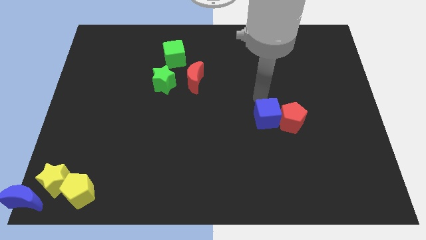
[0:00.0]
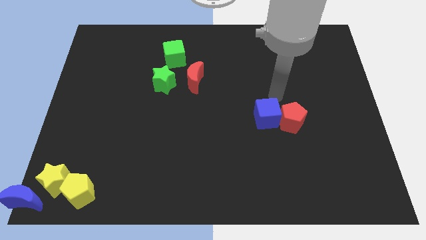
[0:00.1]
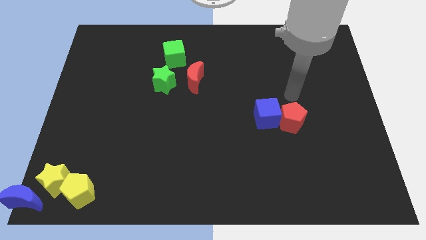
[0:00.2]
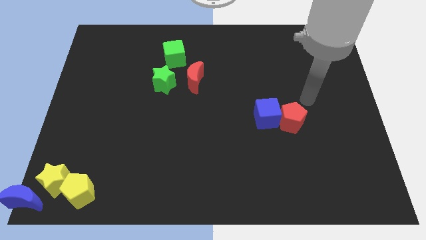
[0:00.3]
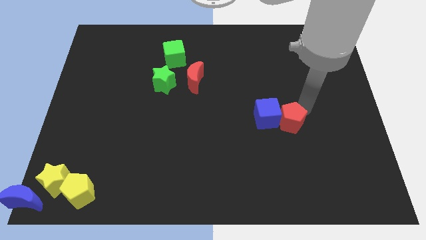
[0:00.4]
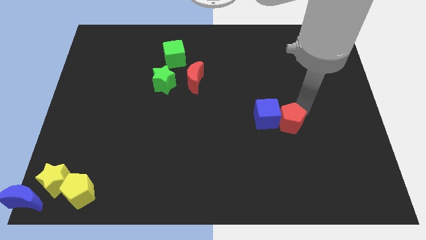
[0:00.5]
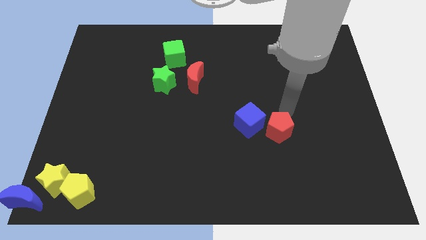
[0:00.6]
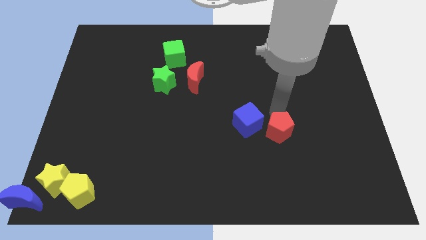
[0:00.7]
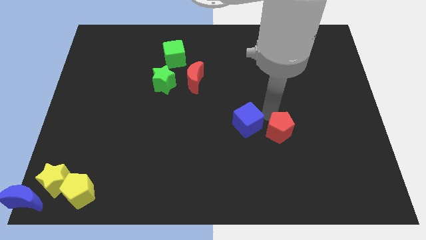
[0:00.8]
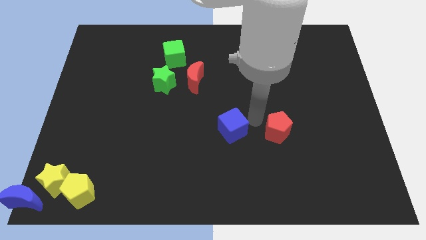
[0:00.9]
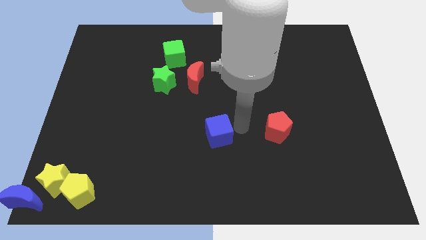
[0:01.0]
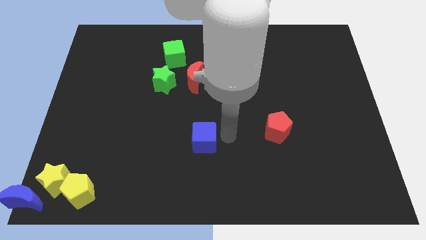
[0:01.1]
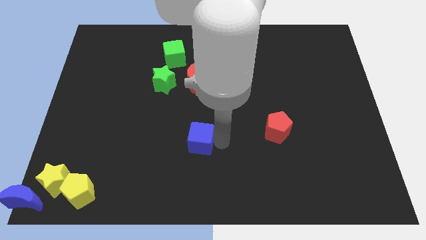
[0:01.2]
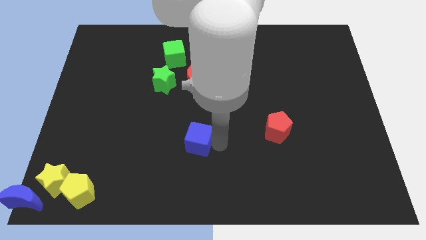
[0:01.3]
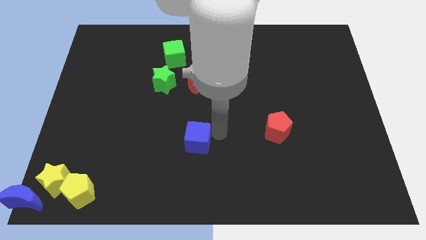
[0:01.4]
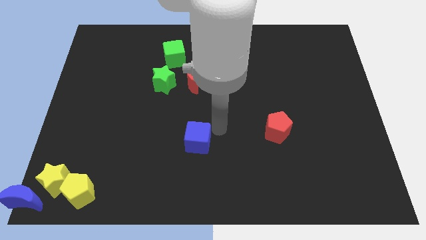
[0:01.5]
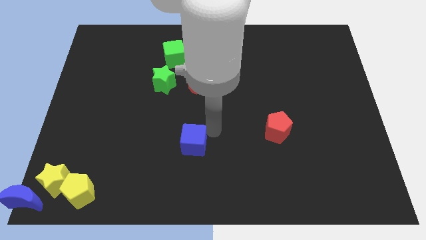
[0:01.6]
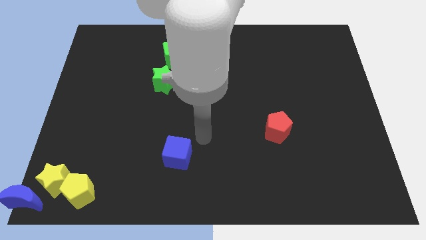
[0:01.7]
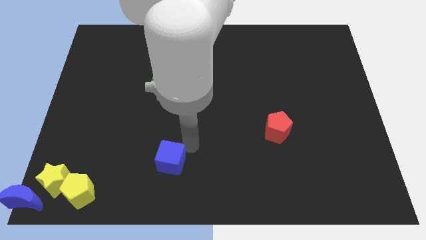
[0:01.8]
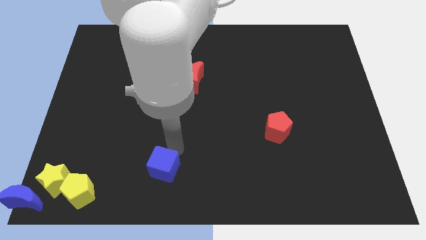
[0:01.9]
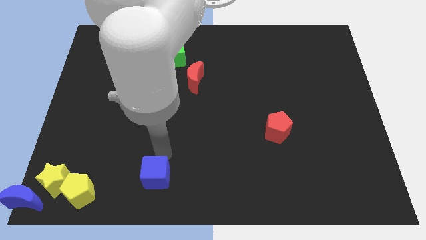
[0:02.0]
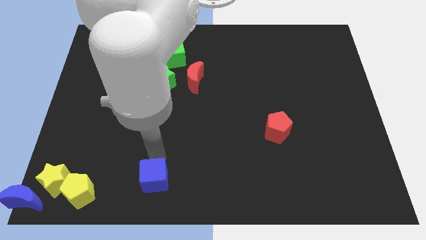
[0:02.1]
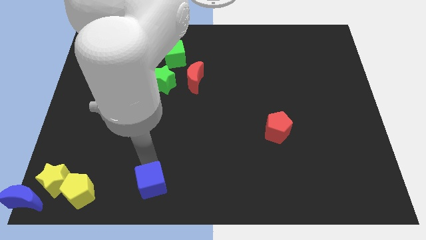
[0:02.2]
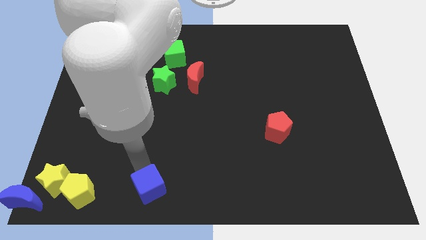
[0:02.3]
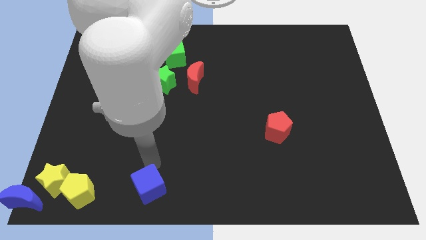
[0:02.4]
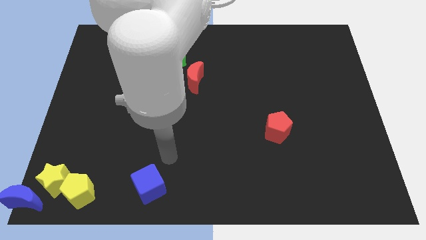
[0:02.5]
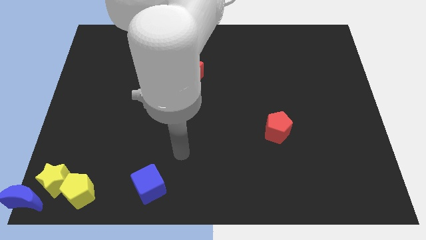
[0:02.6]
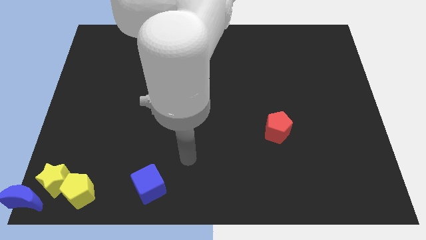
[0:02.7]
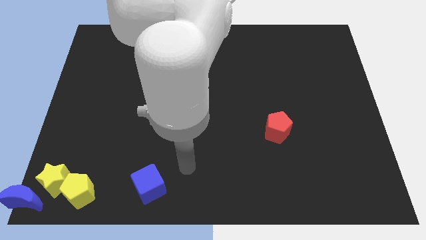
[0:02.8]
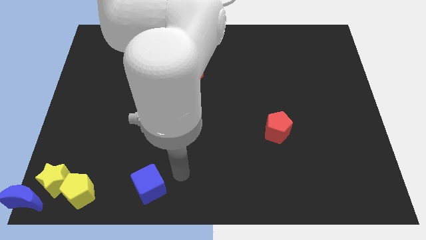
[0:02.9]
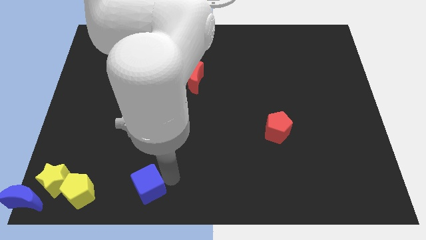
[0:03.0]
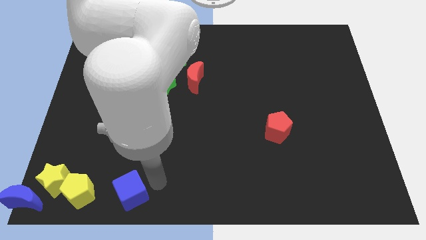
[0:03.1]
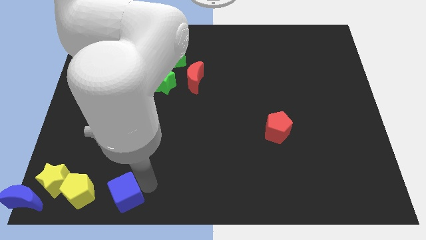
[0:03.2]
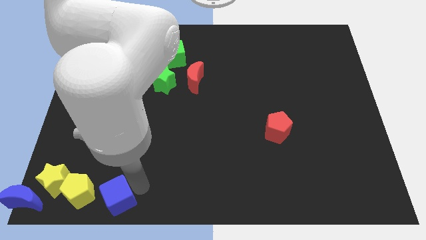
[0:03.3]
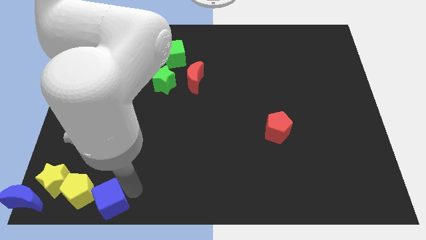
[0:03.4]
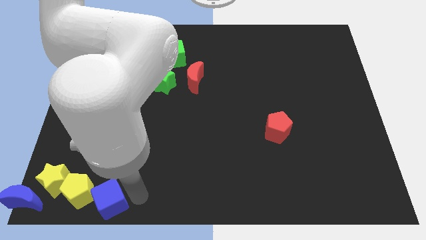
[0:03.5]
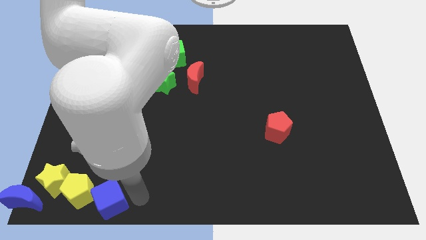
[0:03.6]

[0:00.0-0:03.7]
place the blue cube right to the yellow pentagon

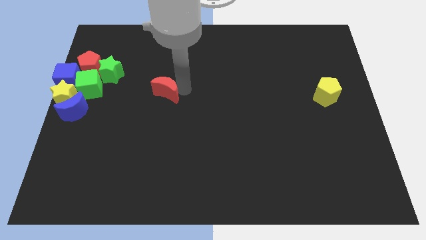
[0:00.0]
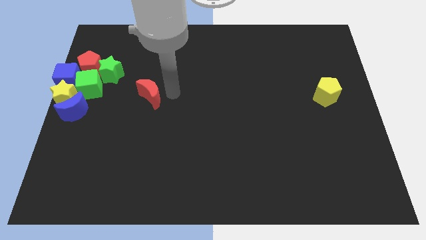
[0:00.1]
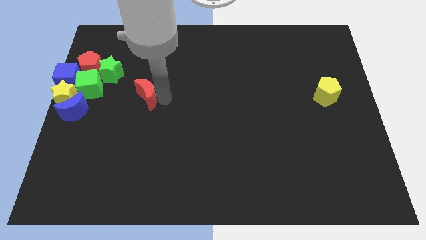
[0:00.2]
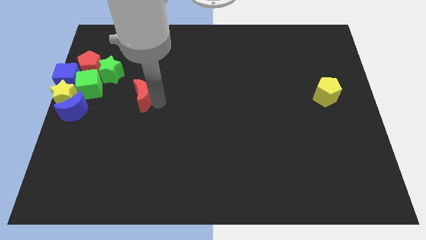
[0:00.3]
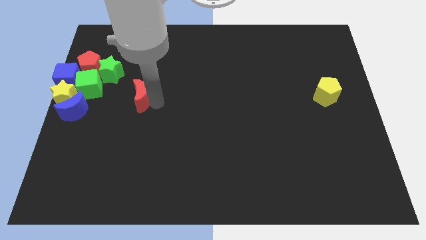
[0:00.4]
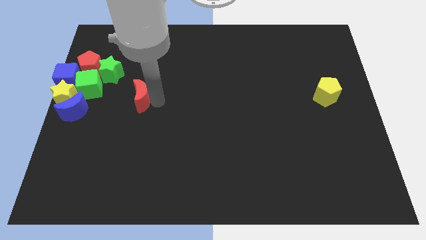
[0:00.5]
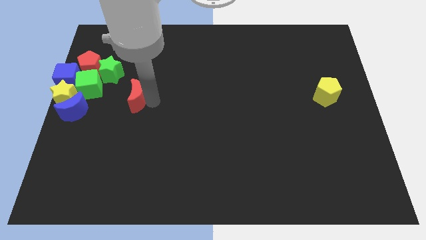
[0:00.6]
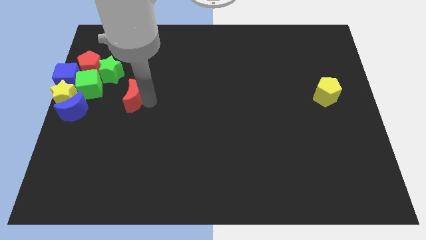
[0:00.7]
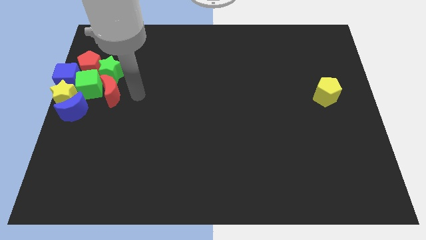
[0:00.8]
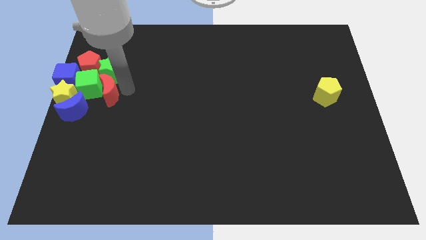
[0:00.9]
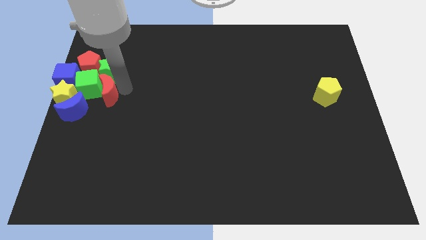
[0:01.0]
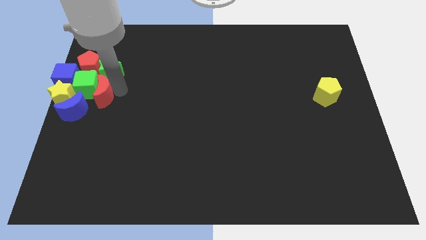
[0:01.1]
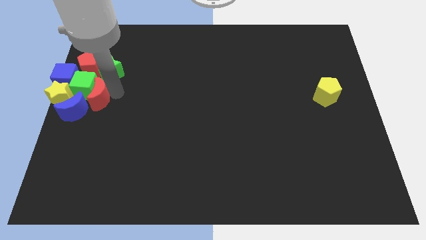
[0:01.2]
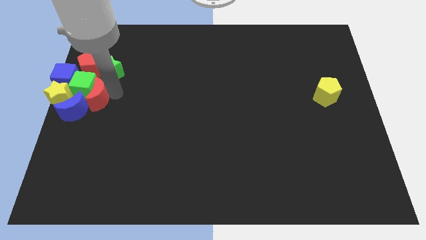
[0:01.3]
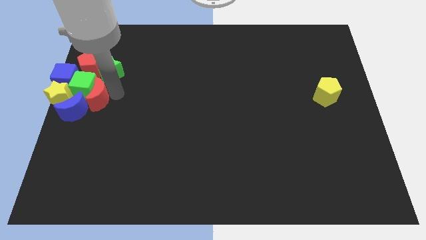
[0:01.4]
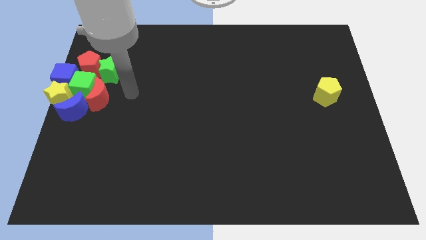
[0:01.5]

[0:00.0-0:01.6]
move the red crescent into the right side of the green cube

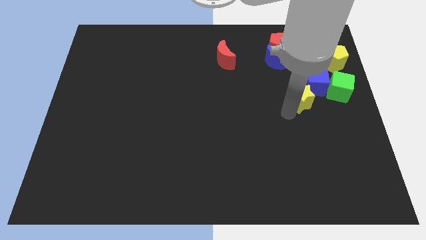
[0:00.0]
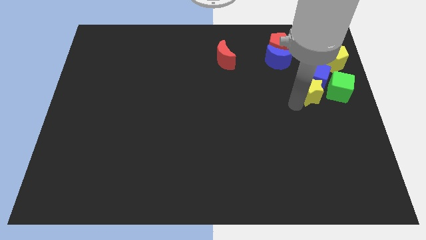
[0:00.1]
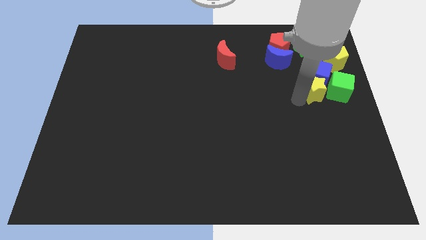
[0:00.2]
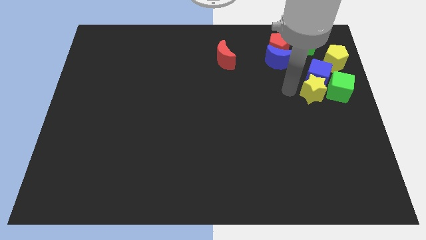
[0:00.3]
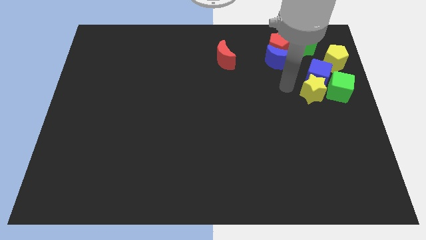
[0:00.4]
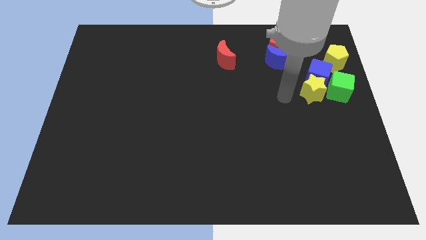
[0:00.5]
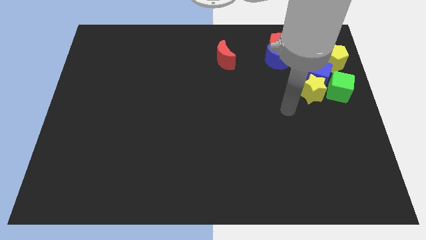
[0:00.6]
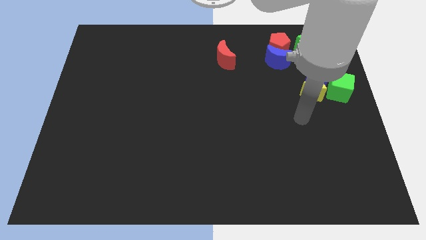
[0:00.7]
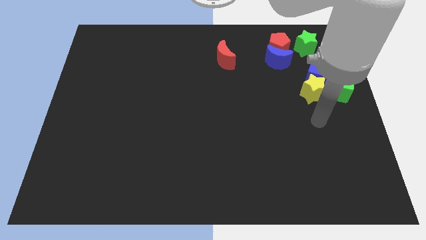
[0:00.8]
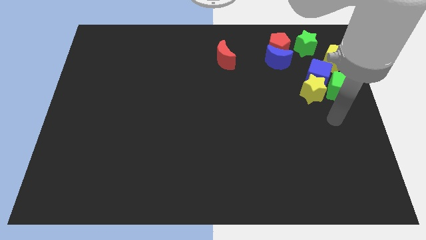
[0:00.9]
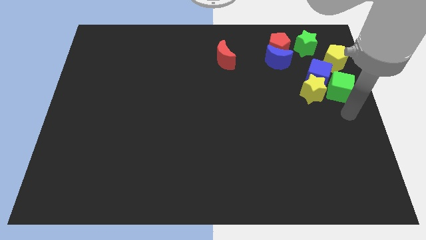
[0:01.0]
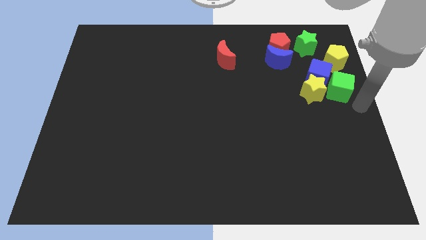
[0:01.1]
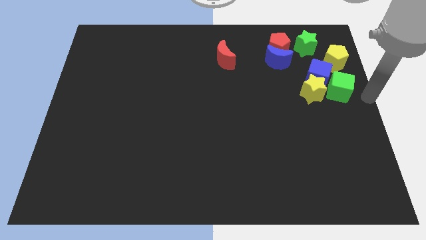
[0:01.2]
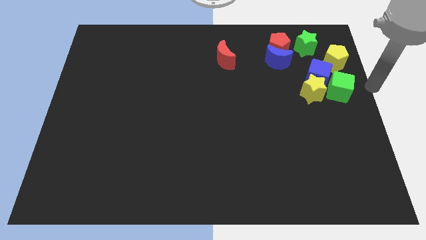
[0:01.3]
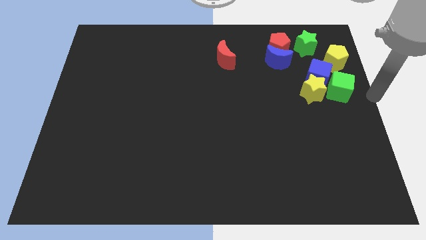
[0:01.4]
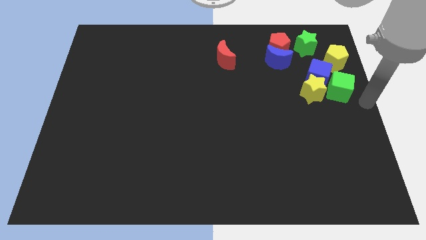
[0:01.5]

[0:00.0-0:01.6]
push the yellow star into the blue cube

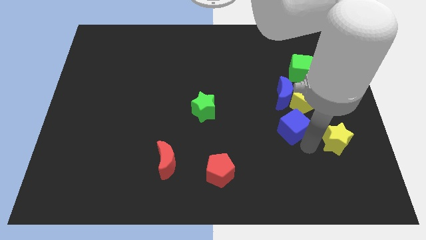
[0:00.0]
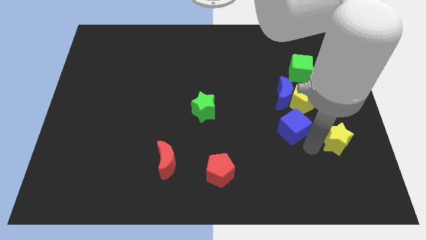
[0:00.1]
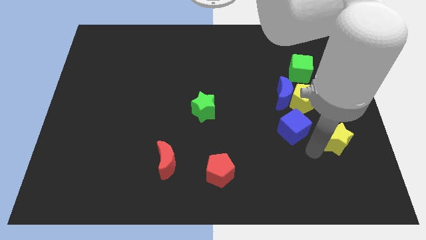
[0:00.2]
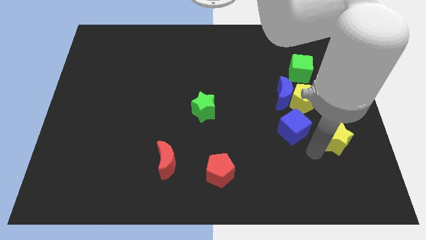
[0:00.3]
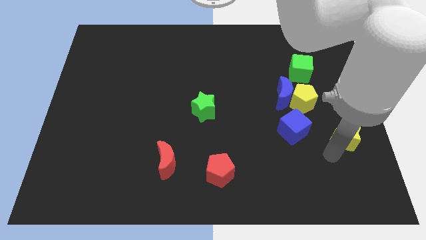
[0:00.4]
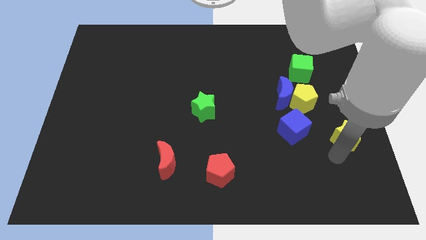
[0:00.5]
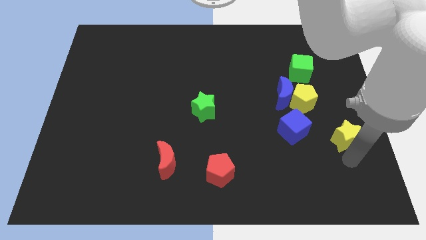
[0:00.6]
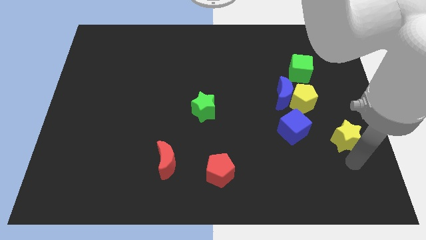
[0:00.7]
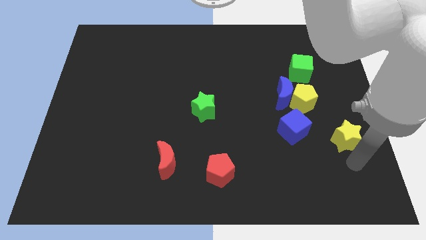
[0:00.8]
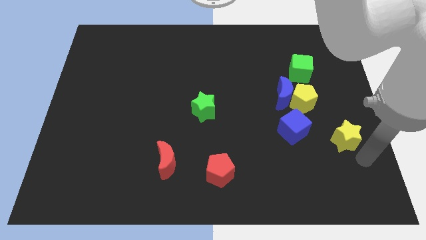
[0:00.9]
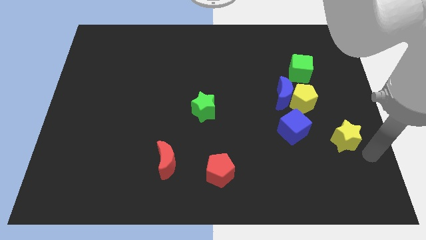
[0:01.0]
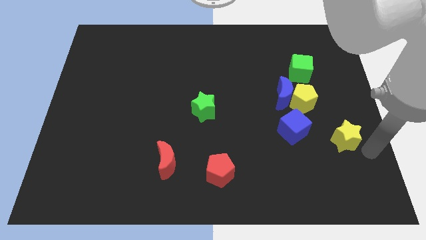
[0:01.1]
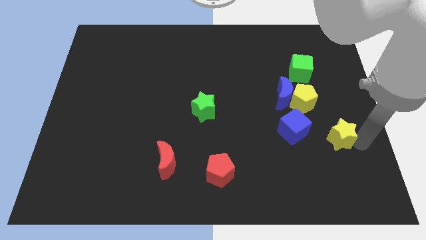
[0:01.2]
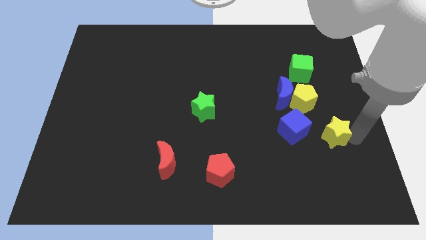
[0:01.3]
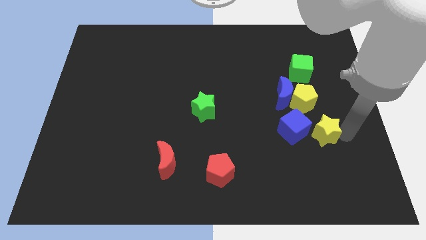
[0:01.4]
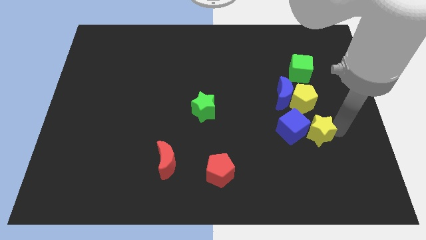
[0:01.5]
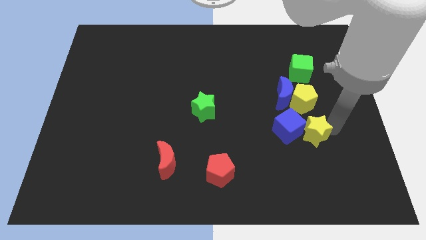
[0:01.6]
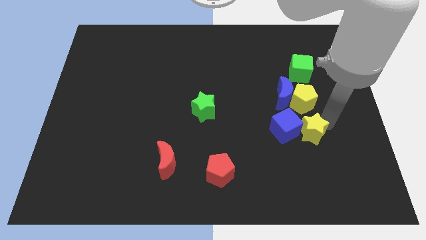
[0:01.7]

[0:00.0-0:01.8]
slightly move the blue cube towards the blue moon
